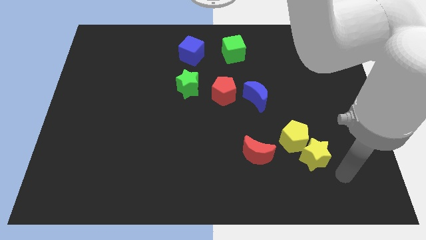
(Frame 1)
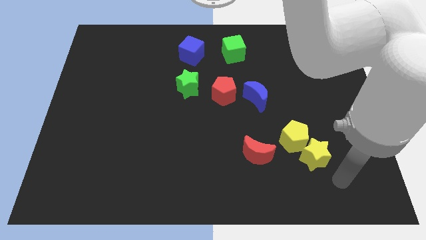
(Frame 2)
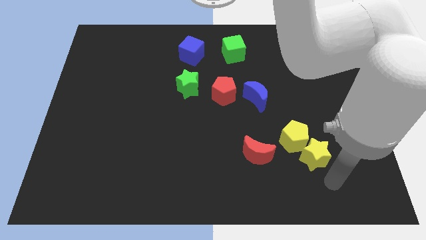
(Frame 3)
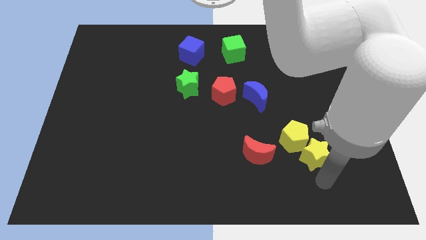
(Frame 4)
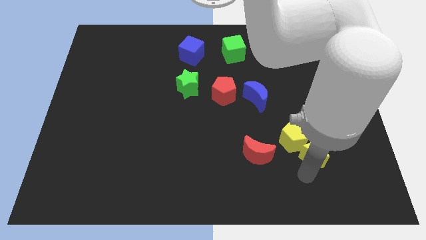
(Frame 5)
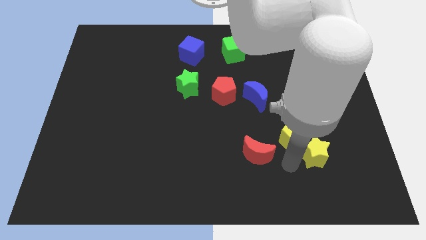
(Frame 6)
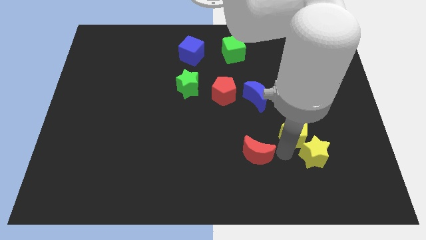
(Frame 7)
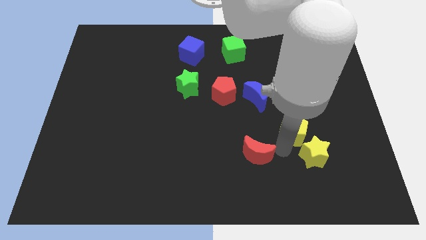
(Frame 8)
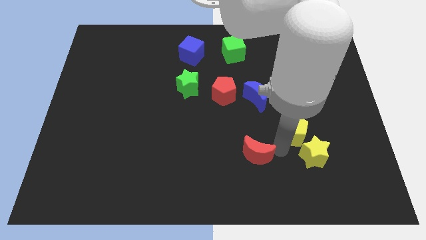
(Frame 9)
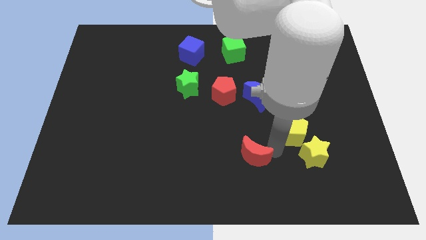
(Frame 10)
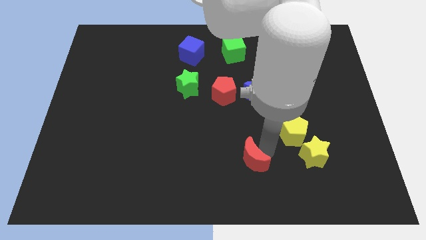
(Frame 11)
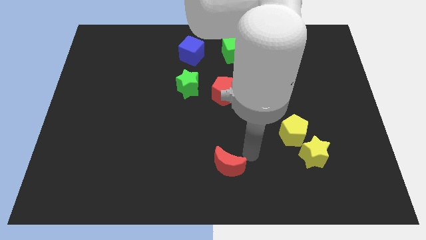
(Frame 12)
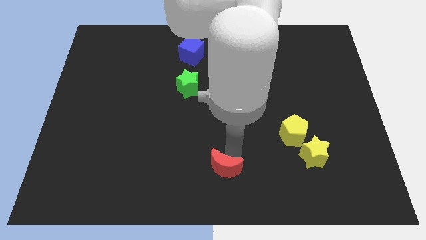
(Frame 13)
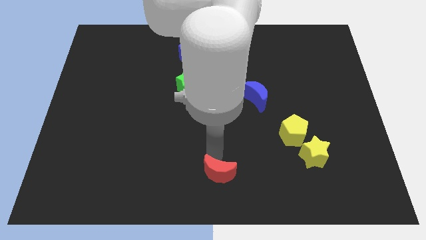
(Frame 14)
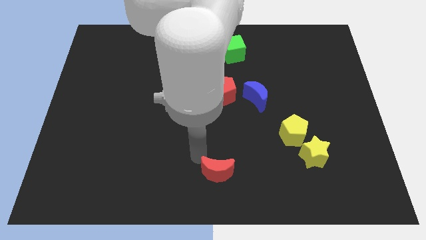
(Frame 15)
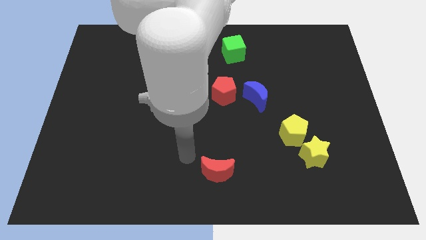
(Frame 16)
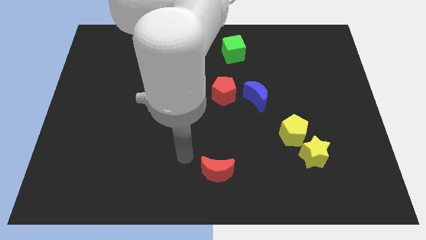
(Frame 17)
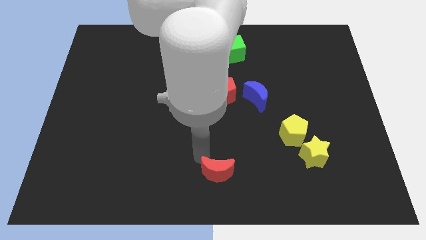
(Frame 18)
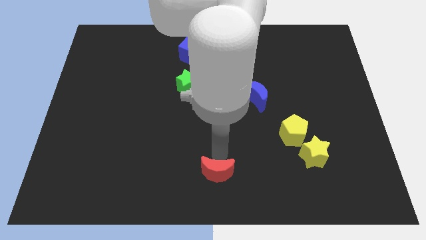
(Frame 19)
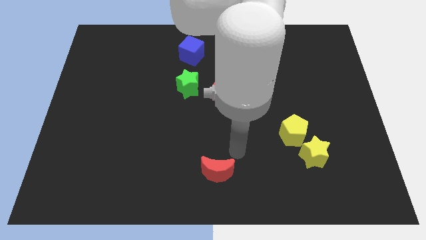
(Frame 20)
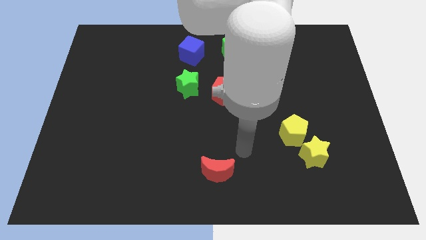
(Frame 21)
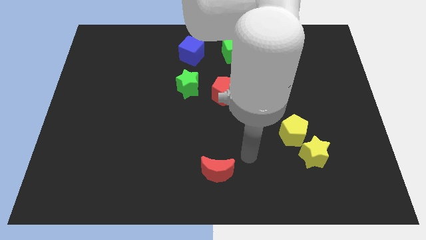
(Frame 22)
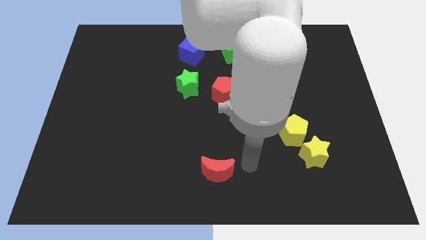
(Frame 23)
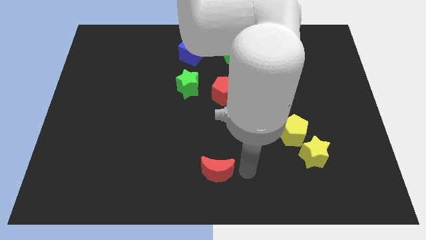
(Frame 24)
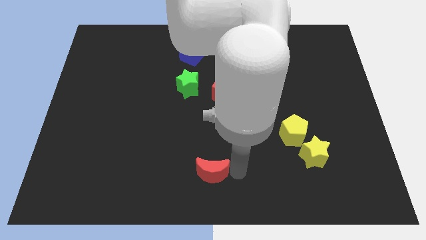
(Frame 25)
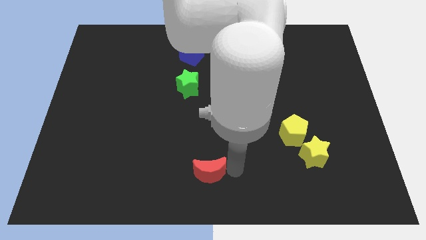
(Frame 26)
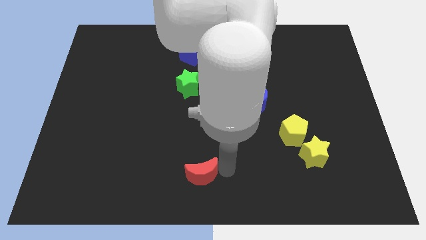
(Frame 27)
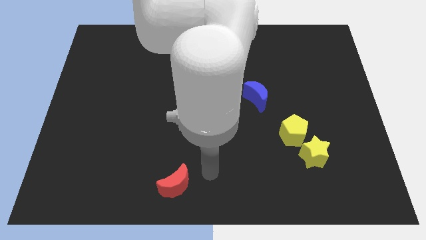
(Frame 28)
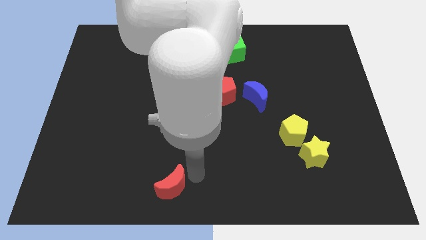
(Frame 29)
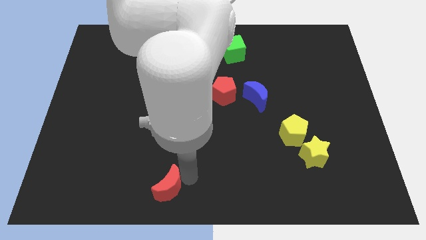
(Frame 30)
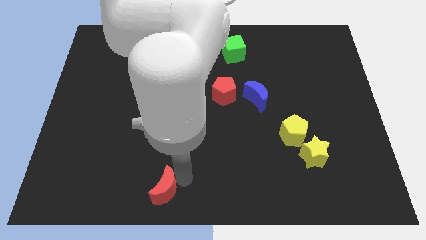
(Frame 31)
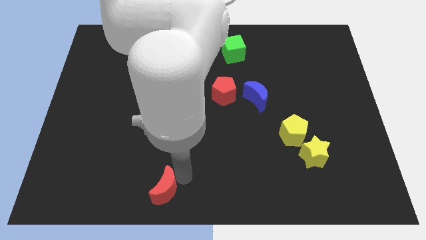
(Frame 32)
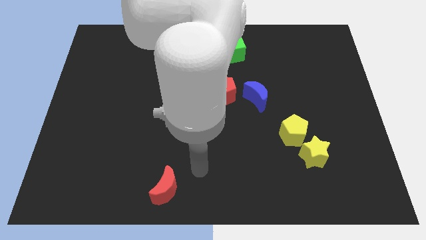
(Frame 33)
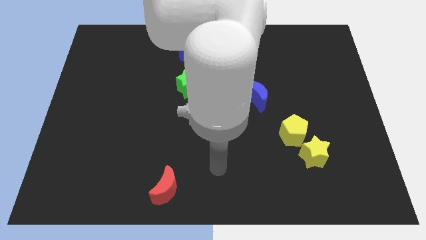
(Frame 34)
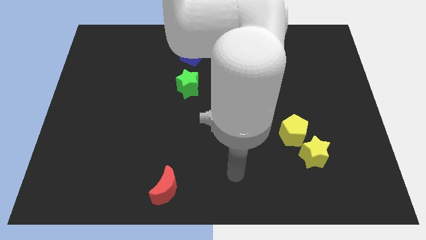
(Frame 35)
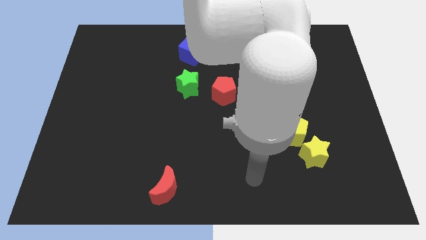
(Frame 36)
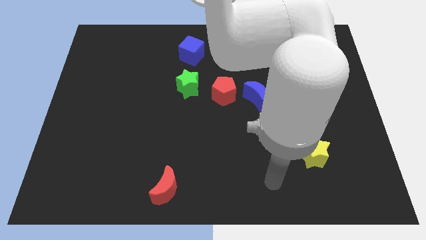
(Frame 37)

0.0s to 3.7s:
move the red moon towards the bottom left

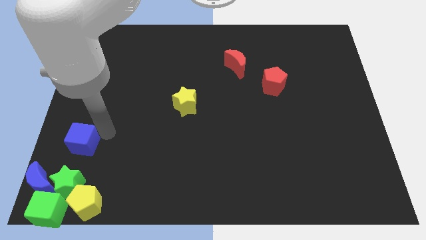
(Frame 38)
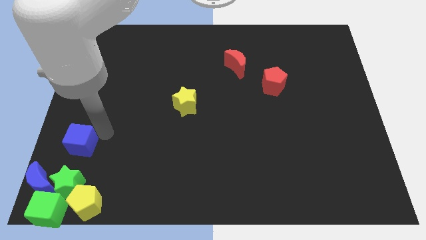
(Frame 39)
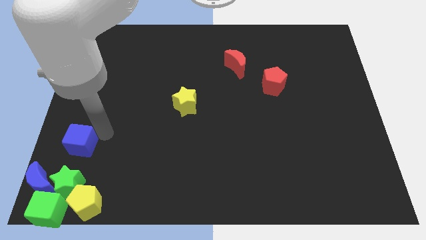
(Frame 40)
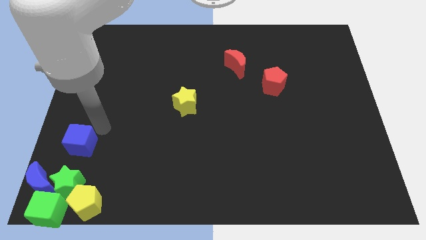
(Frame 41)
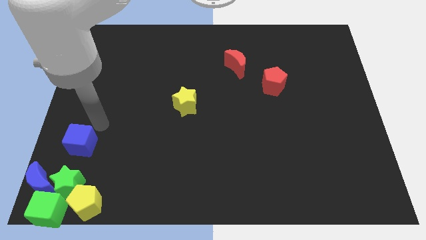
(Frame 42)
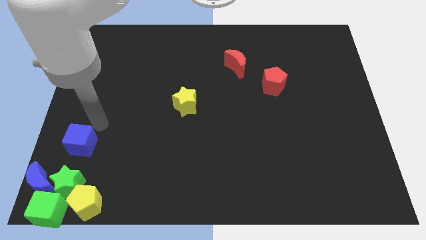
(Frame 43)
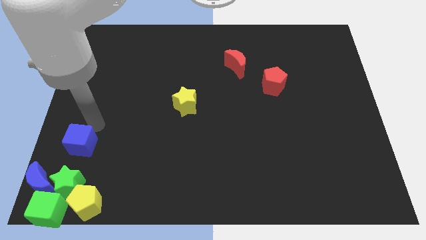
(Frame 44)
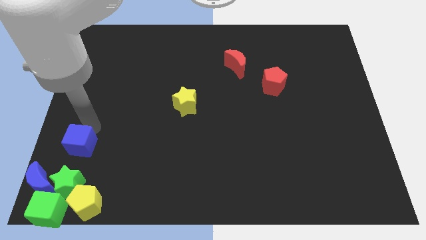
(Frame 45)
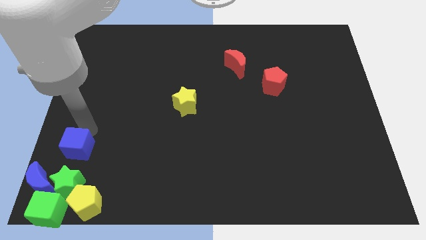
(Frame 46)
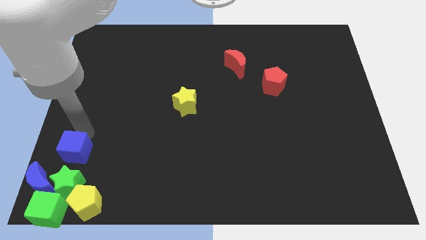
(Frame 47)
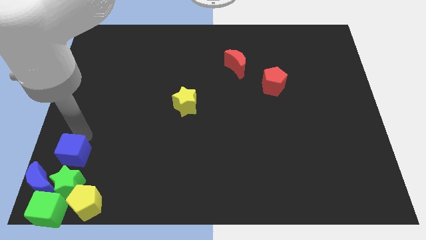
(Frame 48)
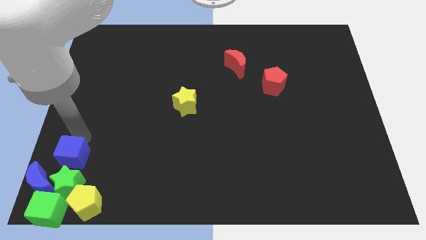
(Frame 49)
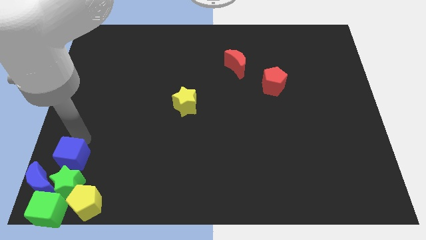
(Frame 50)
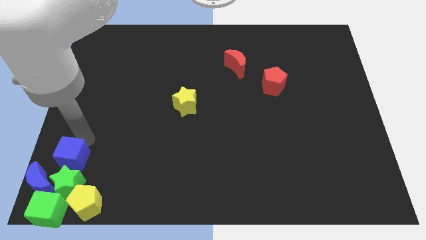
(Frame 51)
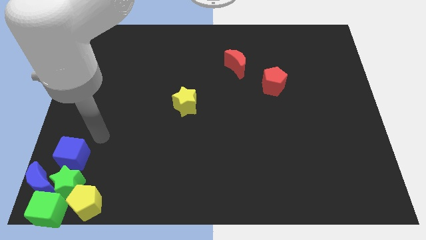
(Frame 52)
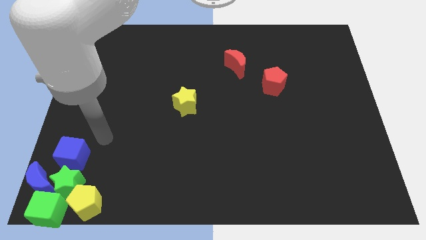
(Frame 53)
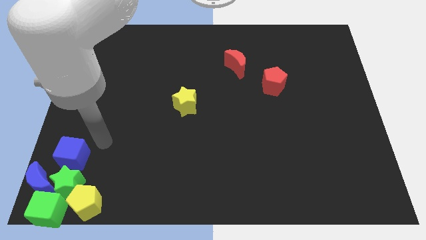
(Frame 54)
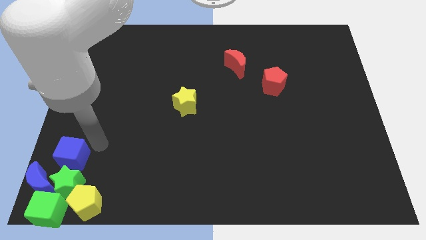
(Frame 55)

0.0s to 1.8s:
move the blue cube to the top side of the green star

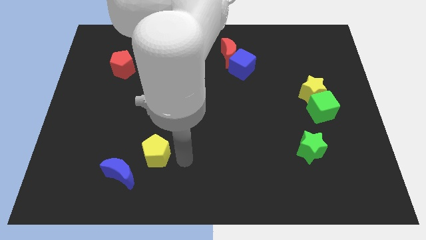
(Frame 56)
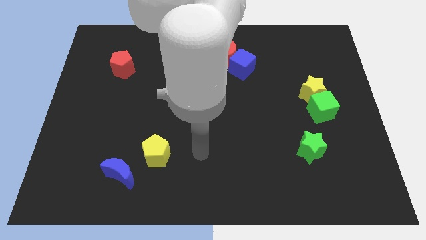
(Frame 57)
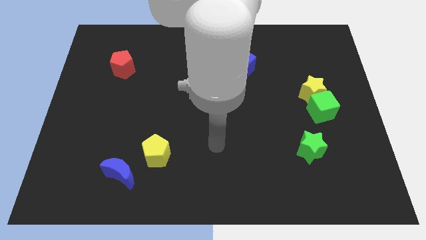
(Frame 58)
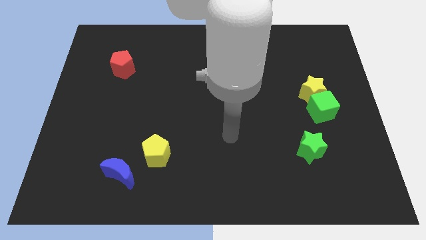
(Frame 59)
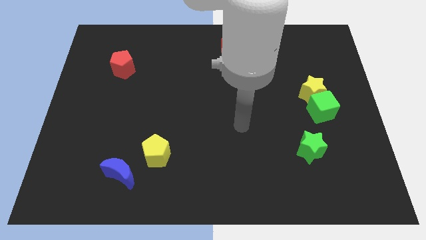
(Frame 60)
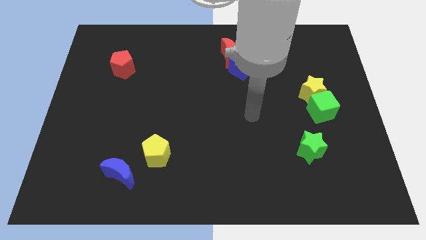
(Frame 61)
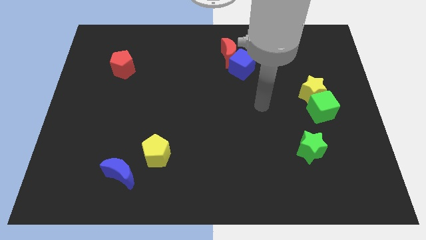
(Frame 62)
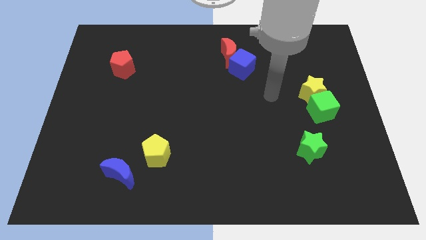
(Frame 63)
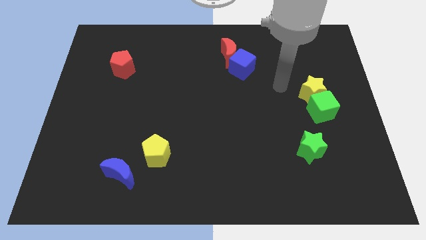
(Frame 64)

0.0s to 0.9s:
move your arm away from yellow pentagon

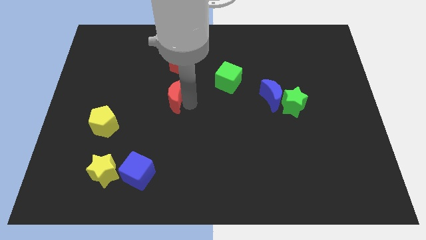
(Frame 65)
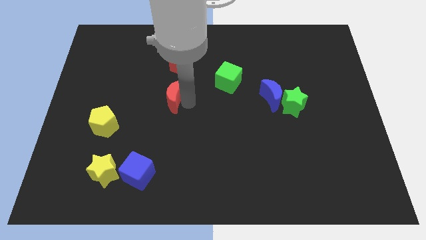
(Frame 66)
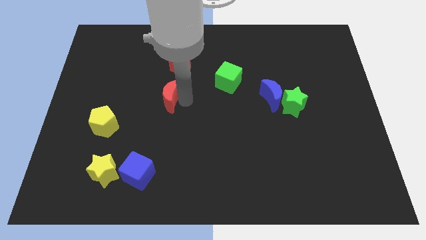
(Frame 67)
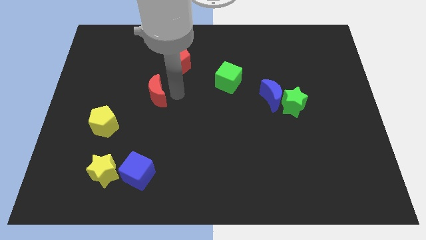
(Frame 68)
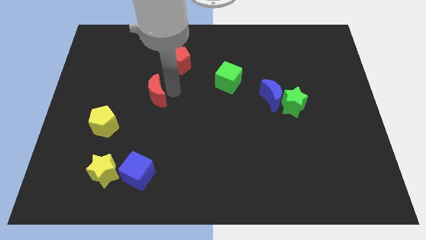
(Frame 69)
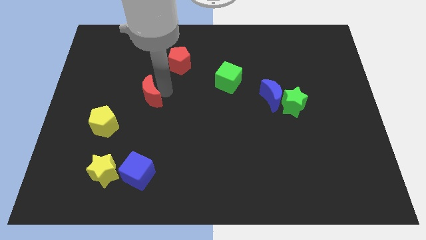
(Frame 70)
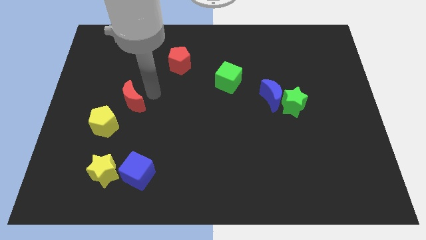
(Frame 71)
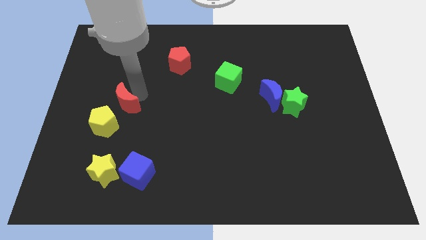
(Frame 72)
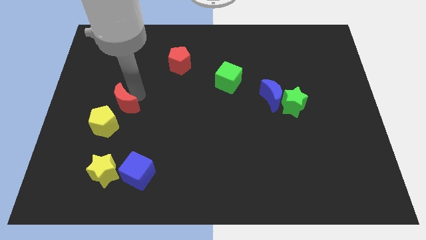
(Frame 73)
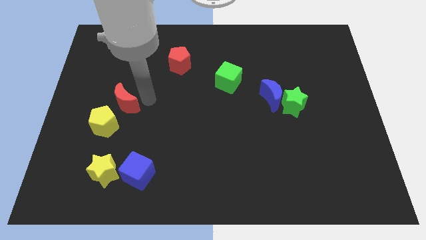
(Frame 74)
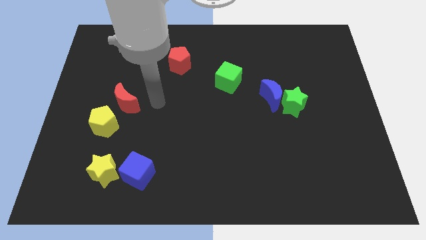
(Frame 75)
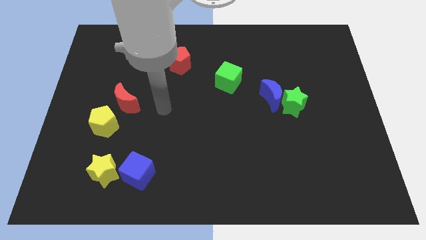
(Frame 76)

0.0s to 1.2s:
move red crescent towards the yellow pentagon

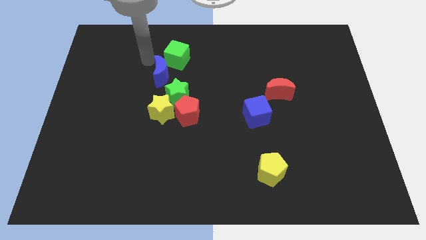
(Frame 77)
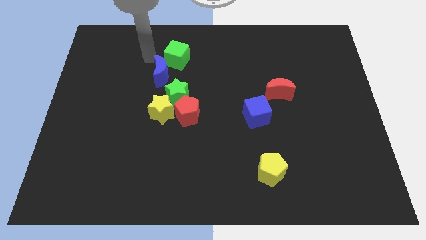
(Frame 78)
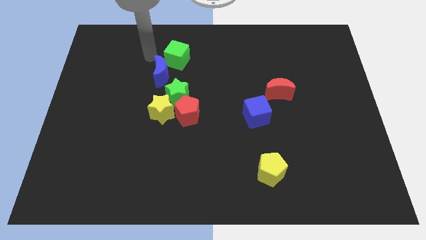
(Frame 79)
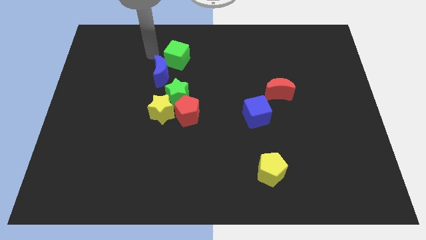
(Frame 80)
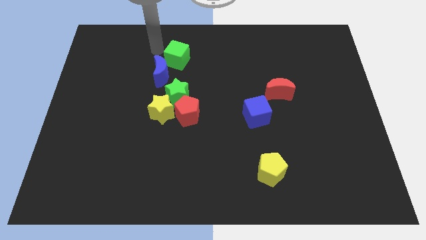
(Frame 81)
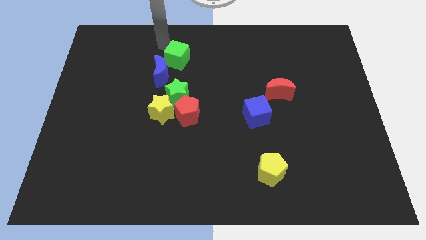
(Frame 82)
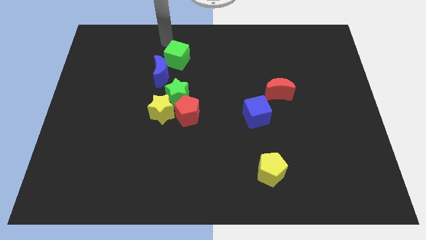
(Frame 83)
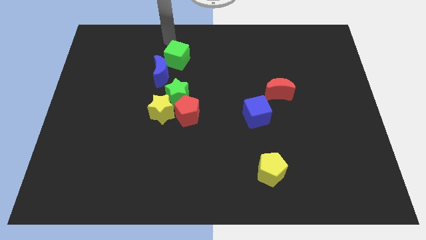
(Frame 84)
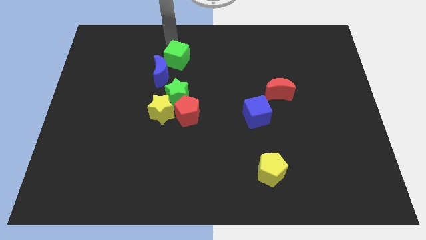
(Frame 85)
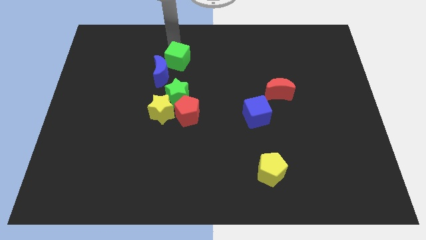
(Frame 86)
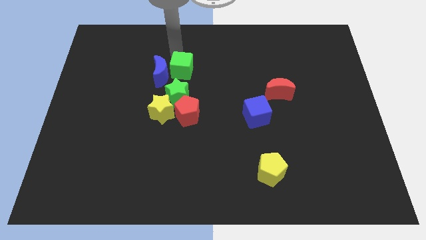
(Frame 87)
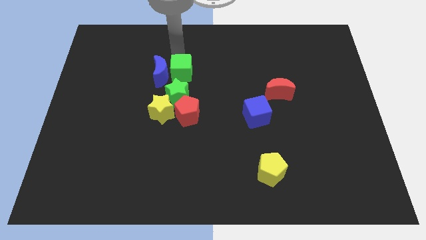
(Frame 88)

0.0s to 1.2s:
place green cube to the right of the blue moon

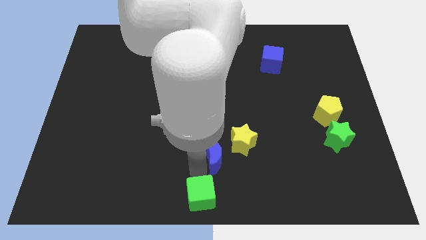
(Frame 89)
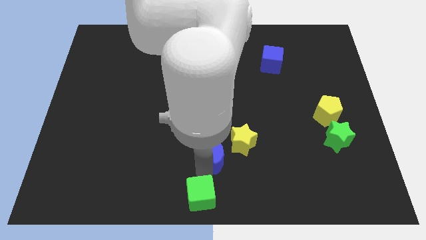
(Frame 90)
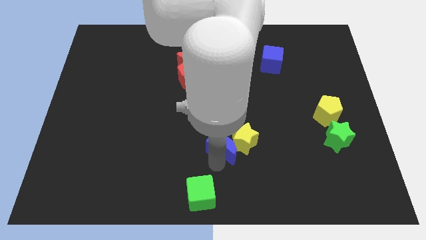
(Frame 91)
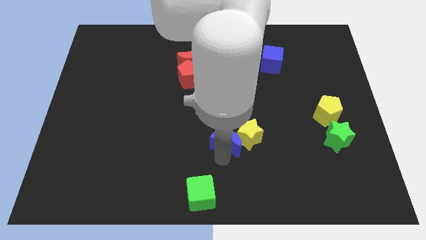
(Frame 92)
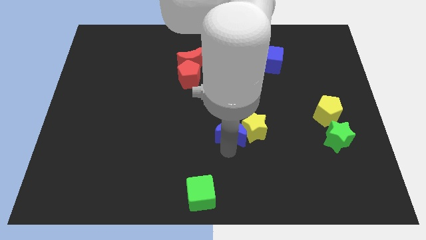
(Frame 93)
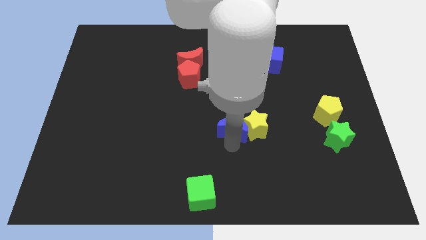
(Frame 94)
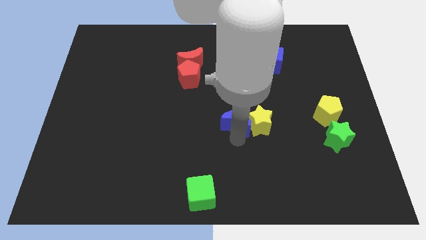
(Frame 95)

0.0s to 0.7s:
push the blue moon into the yellow star
